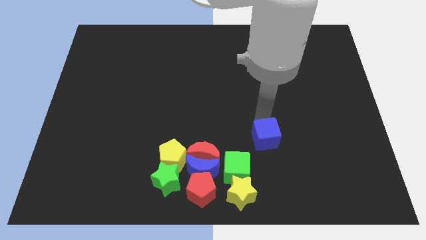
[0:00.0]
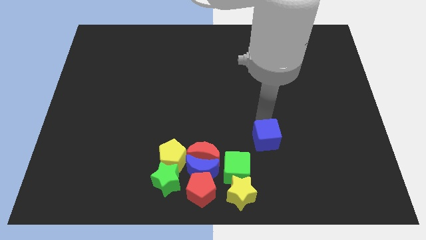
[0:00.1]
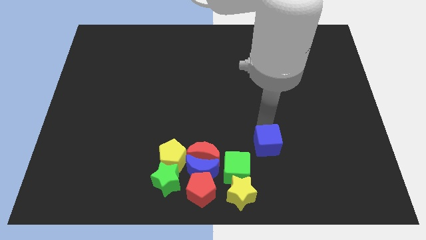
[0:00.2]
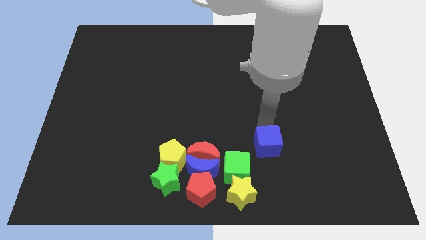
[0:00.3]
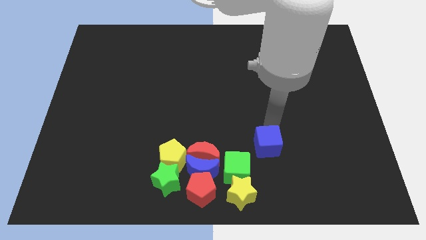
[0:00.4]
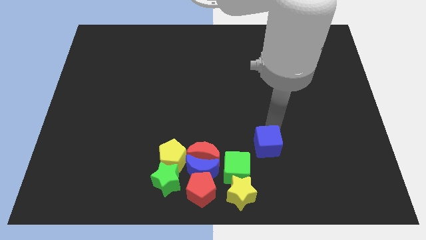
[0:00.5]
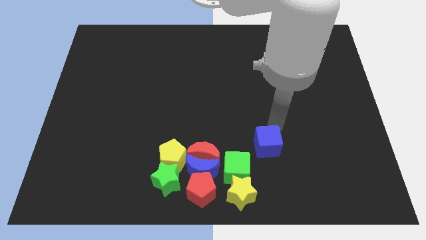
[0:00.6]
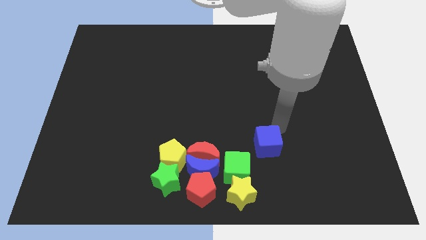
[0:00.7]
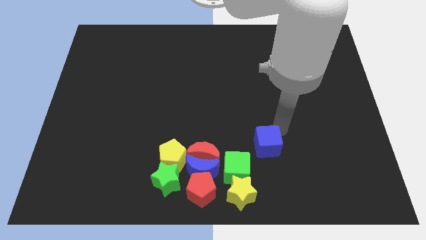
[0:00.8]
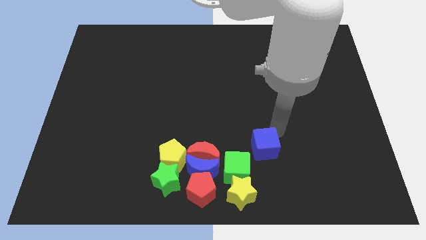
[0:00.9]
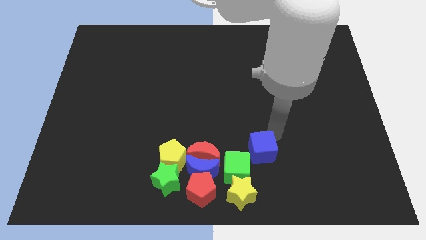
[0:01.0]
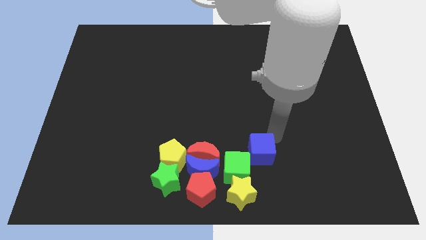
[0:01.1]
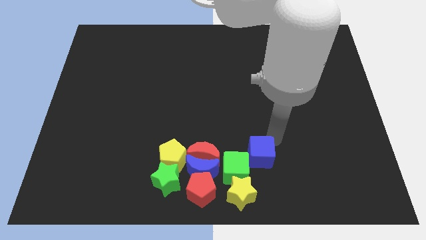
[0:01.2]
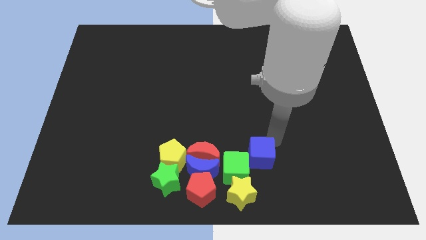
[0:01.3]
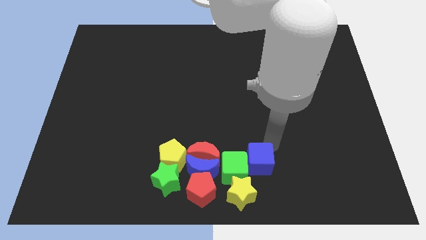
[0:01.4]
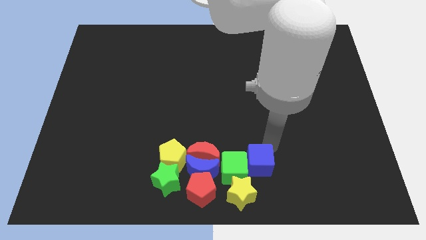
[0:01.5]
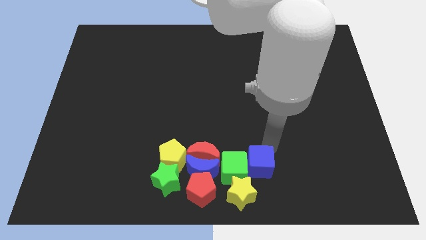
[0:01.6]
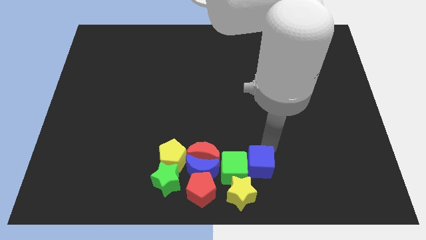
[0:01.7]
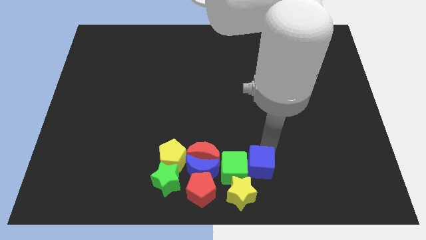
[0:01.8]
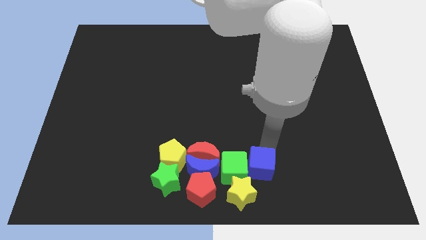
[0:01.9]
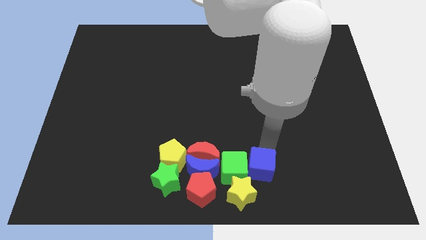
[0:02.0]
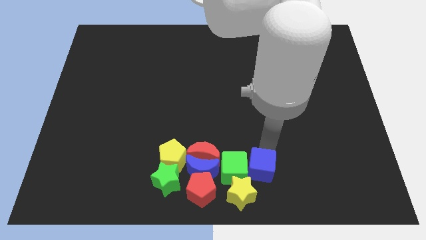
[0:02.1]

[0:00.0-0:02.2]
put the blue cube to the right side of the green cube

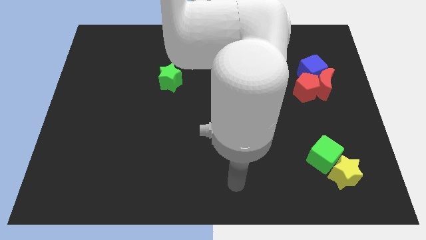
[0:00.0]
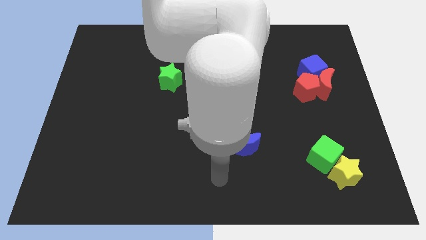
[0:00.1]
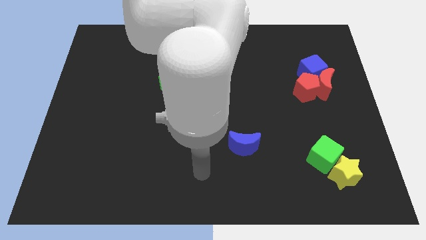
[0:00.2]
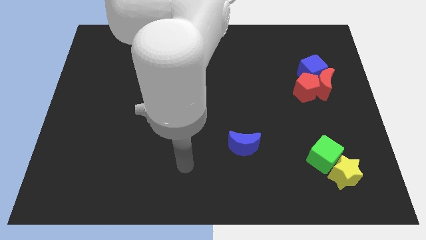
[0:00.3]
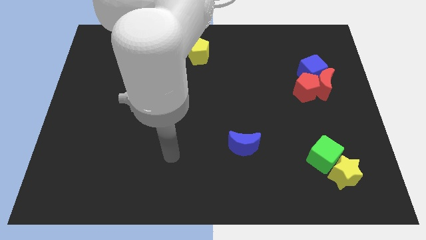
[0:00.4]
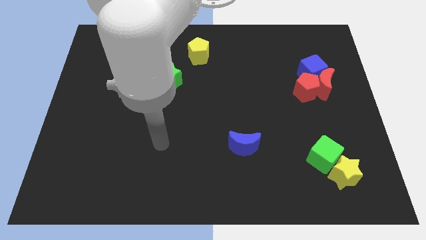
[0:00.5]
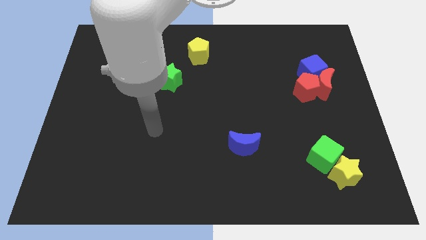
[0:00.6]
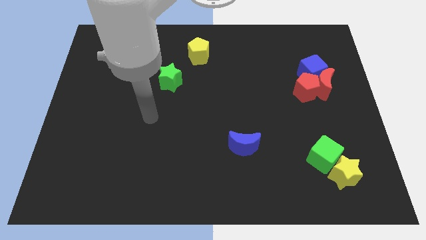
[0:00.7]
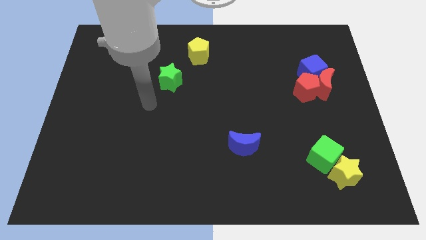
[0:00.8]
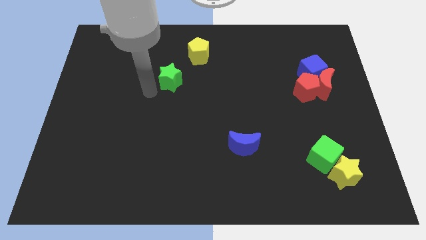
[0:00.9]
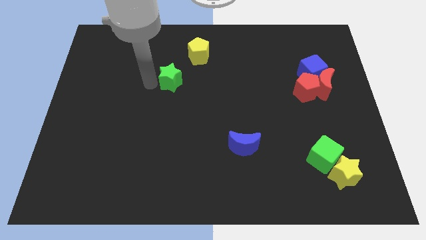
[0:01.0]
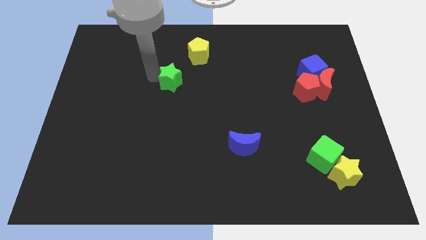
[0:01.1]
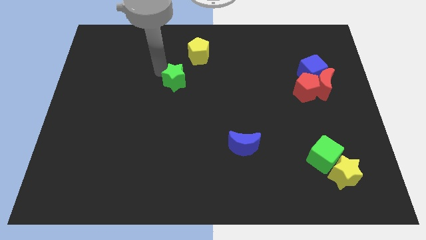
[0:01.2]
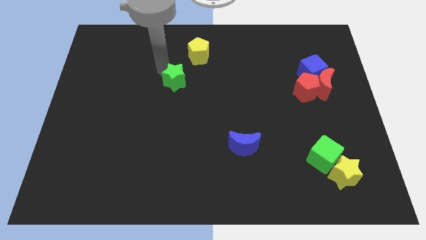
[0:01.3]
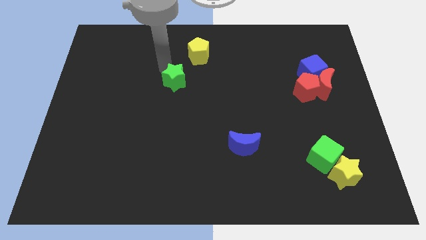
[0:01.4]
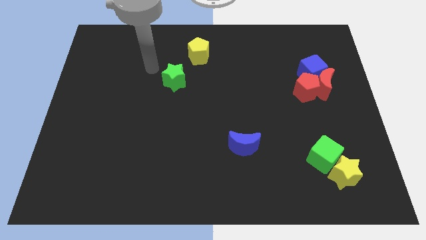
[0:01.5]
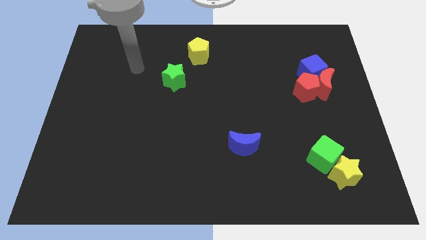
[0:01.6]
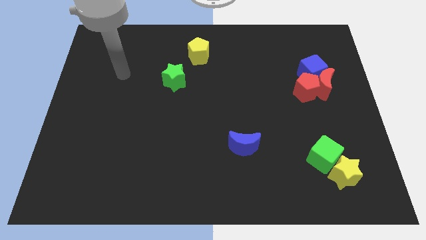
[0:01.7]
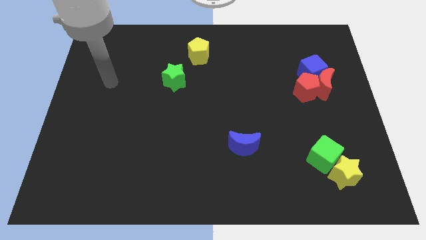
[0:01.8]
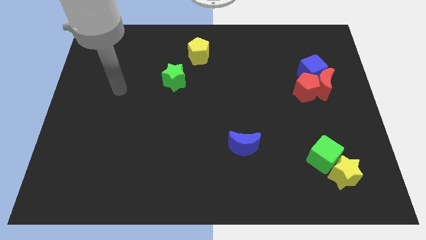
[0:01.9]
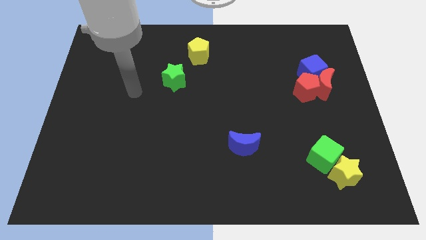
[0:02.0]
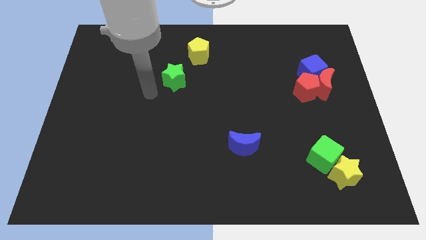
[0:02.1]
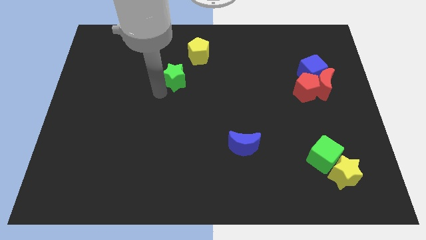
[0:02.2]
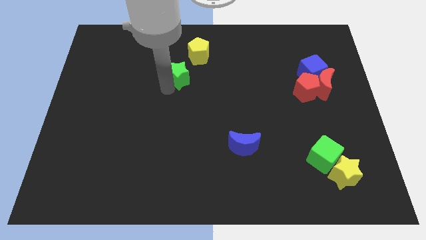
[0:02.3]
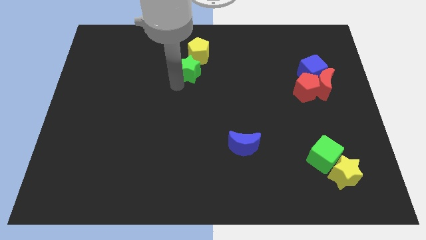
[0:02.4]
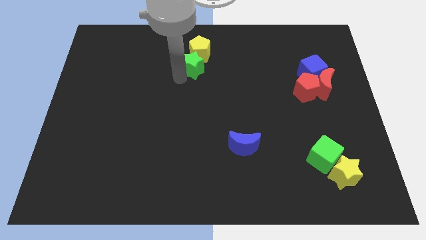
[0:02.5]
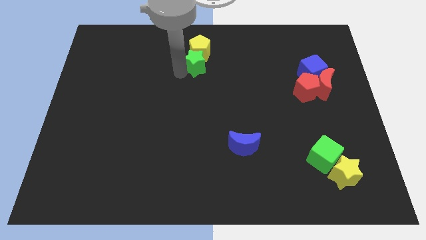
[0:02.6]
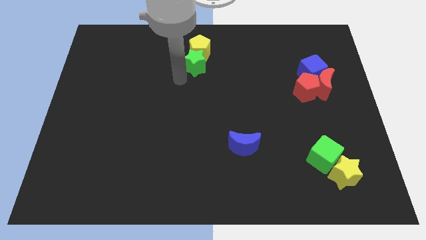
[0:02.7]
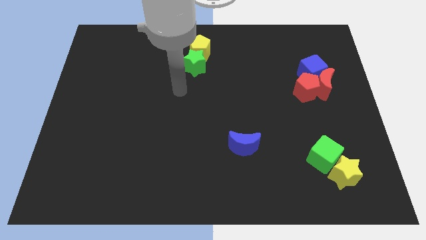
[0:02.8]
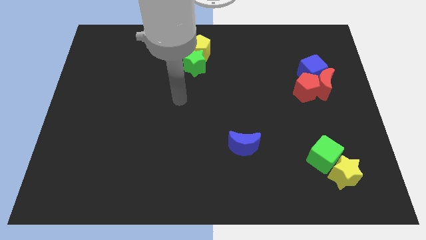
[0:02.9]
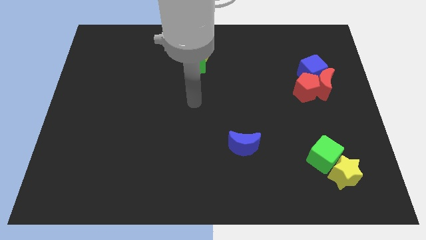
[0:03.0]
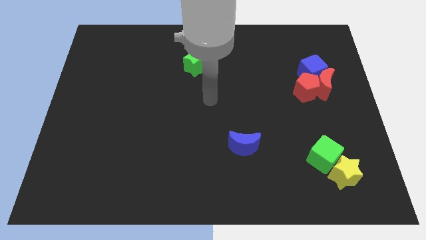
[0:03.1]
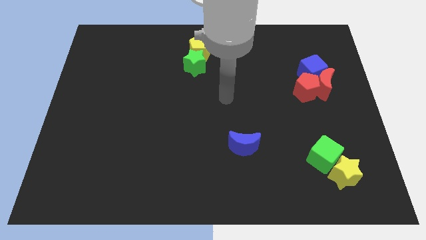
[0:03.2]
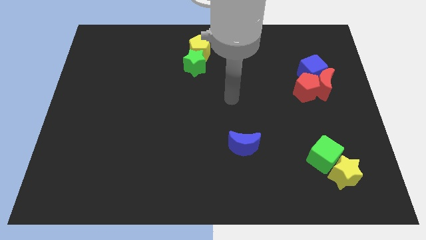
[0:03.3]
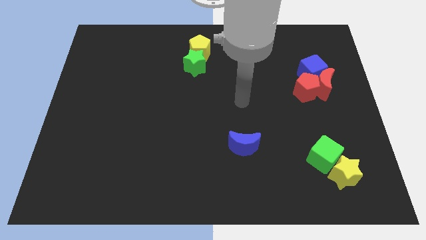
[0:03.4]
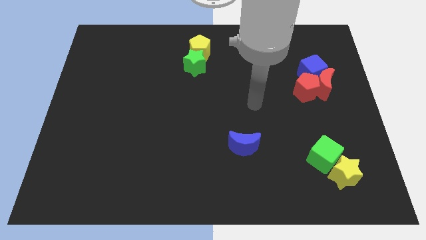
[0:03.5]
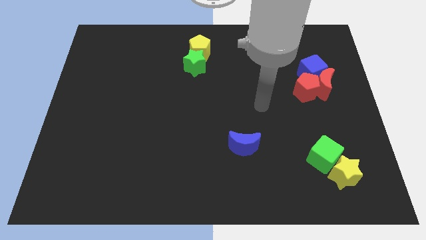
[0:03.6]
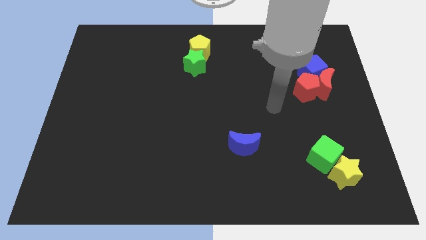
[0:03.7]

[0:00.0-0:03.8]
push green star close to yellow pentagon

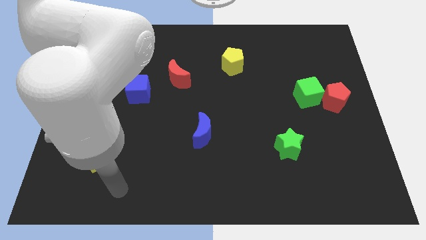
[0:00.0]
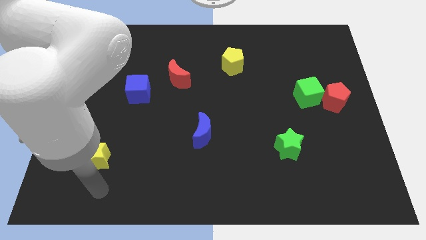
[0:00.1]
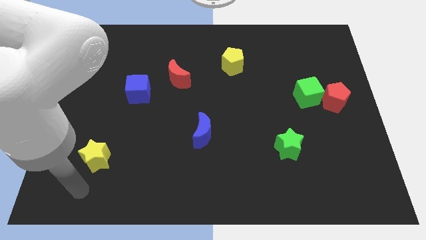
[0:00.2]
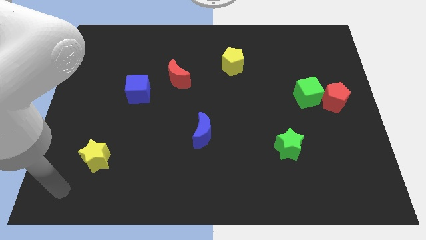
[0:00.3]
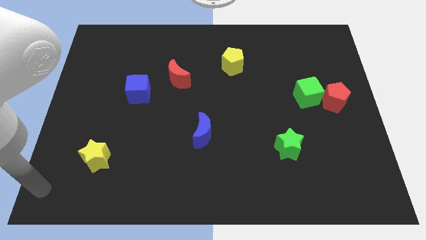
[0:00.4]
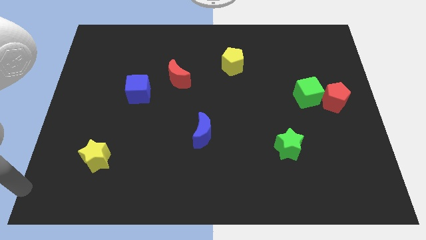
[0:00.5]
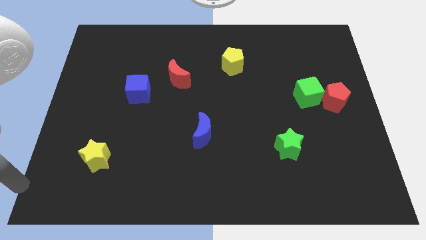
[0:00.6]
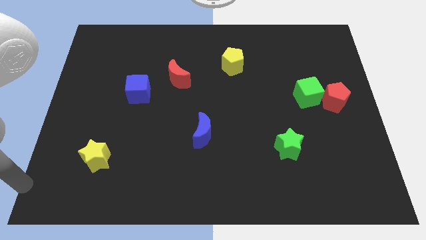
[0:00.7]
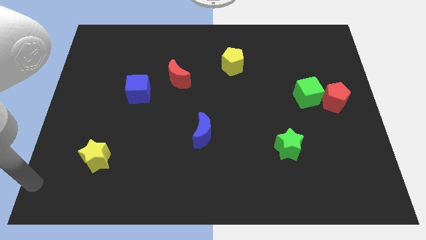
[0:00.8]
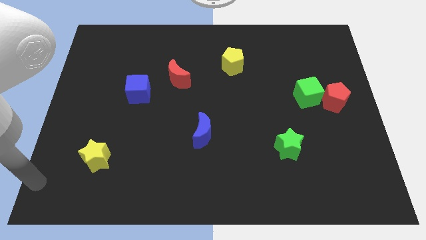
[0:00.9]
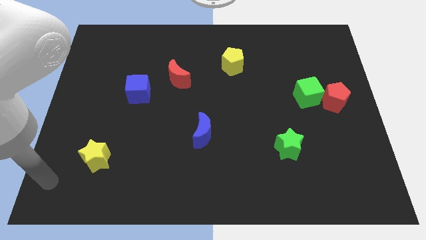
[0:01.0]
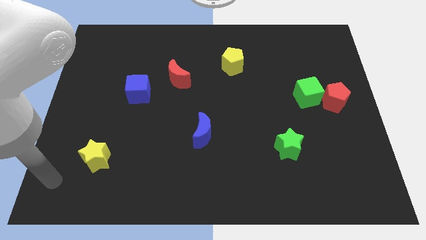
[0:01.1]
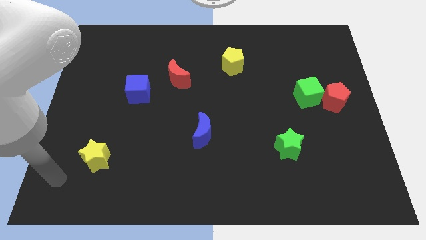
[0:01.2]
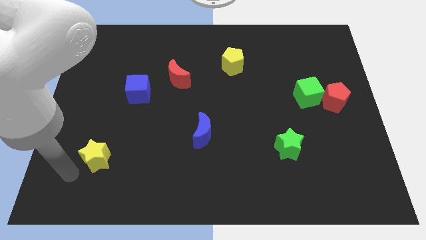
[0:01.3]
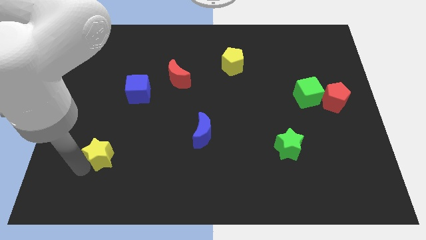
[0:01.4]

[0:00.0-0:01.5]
place your arm at the bottom left side of yellow star

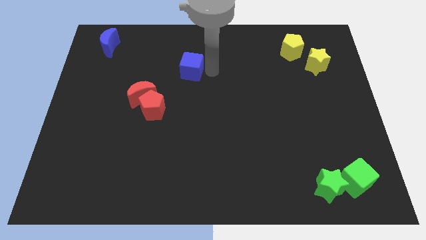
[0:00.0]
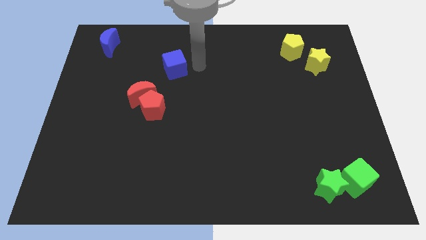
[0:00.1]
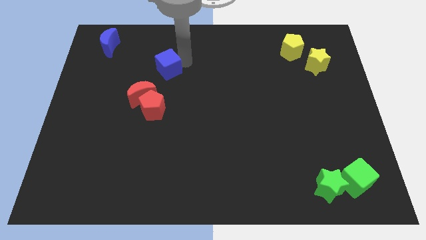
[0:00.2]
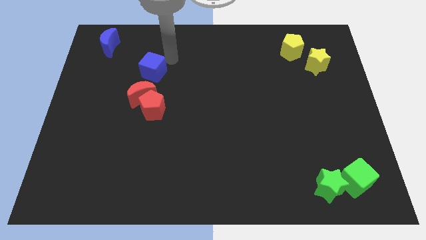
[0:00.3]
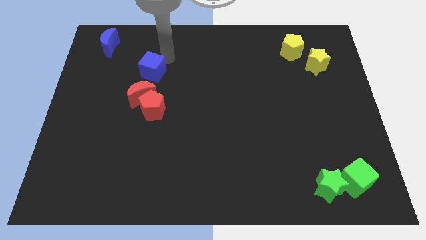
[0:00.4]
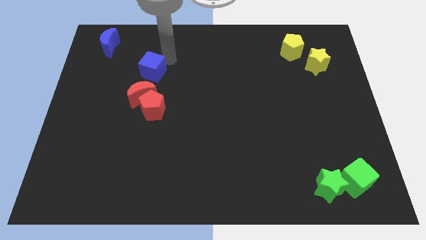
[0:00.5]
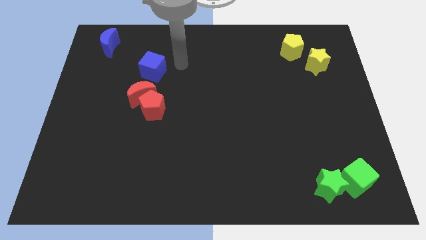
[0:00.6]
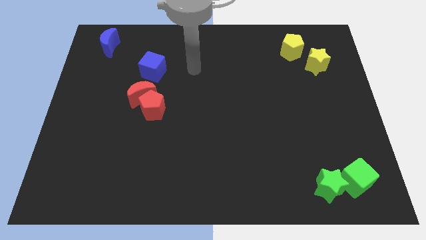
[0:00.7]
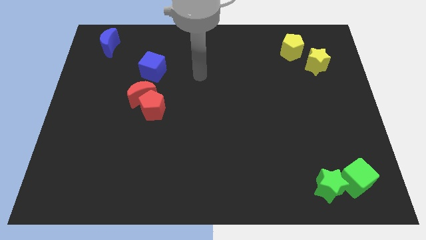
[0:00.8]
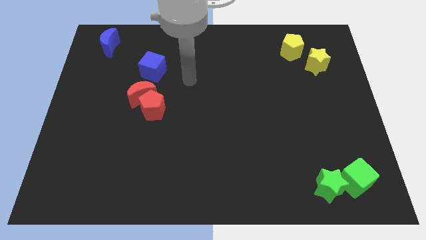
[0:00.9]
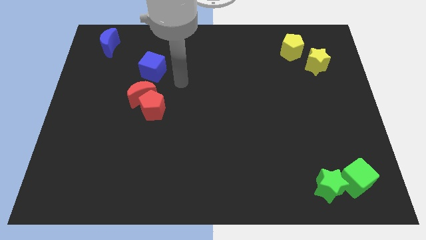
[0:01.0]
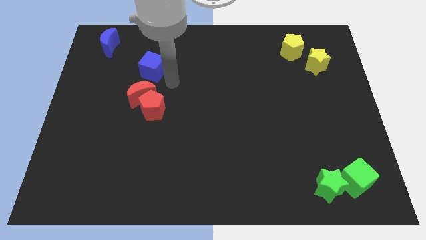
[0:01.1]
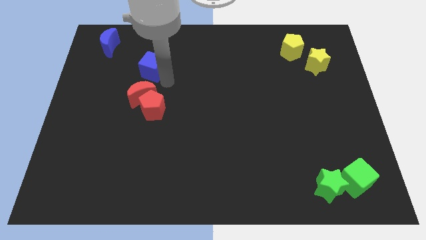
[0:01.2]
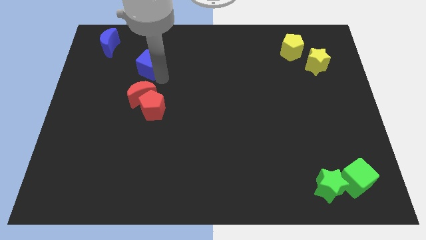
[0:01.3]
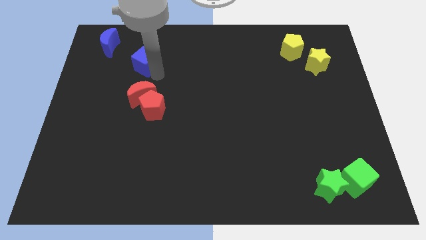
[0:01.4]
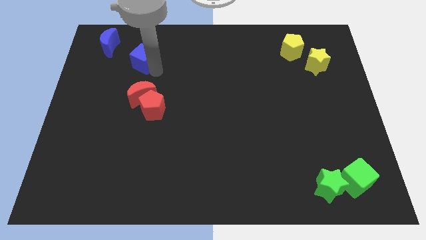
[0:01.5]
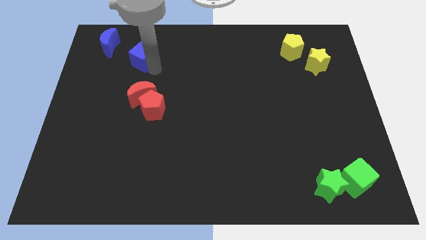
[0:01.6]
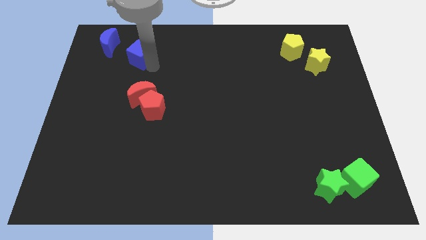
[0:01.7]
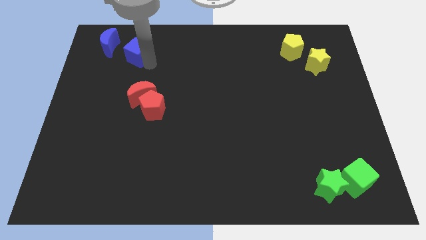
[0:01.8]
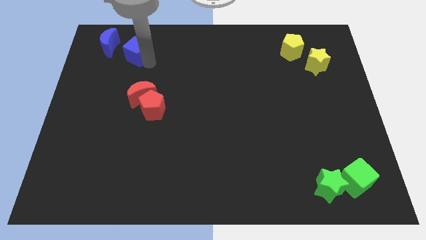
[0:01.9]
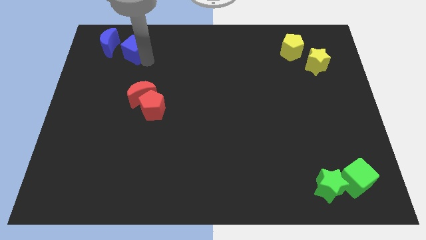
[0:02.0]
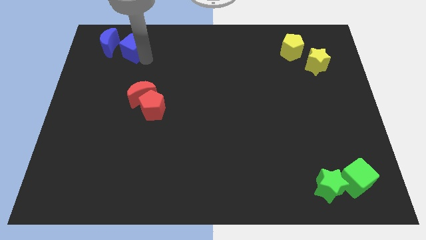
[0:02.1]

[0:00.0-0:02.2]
move the blue cube towards blue crescent
